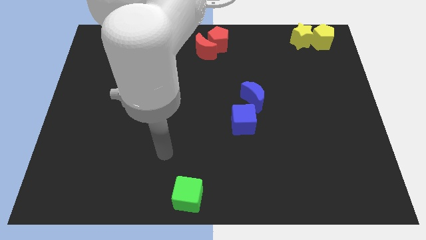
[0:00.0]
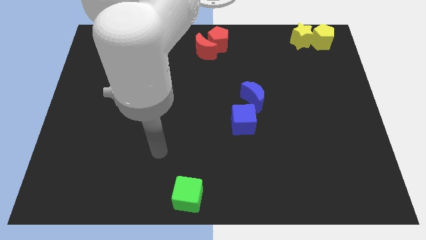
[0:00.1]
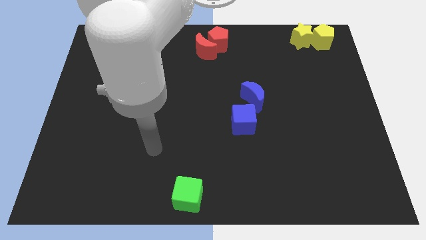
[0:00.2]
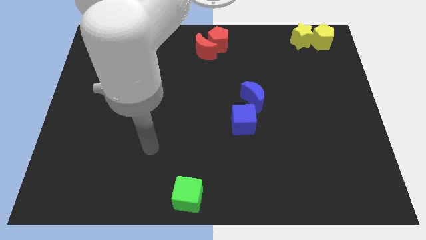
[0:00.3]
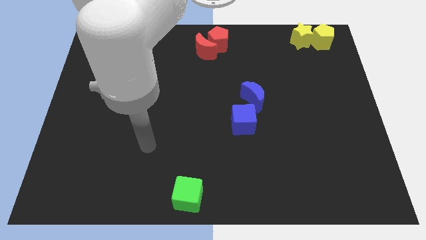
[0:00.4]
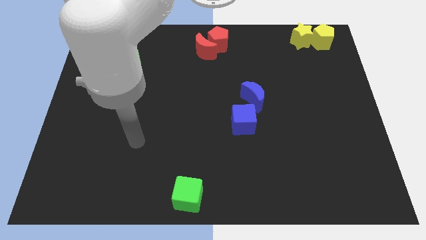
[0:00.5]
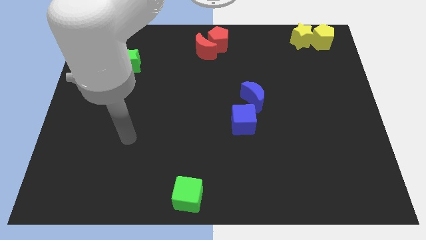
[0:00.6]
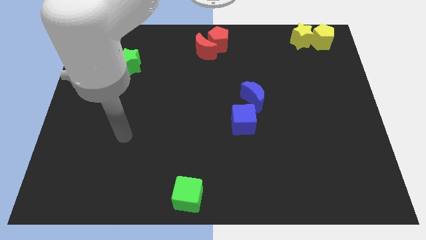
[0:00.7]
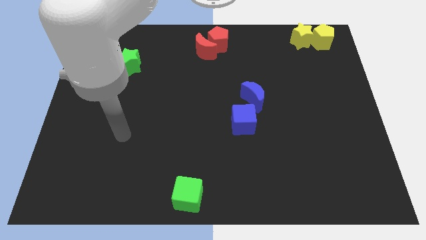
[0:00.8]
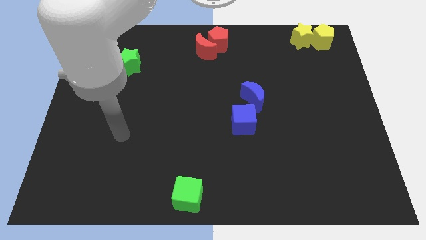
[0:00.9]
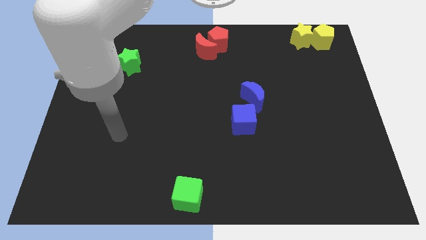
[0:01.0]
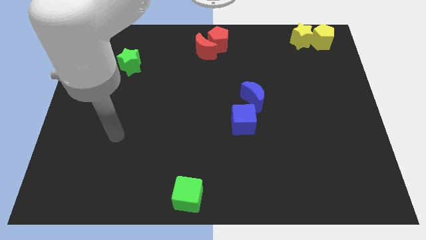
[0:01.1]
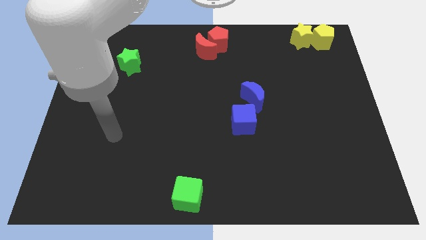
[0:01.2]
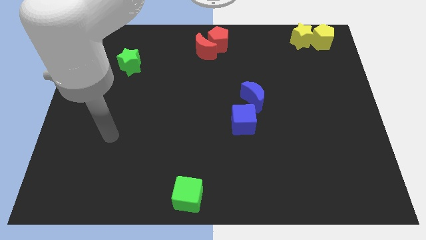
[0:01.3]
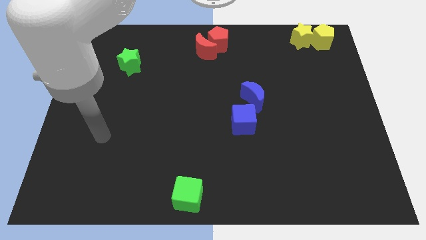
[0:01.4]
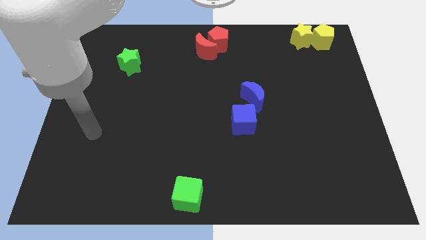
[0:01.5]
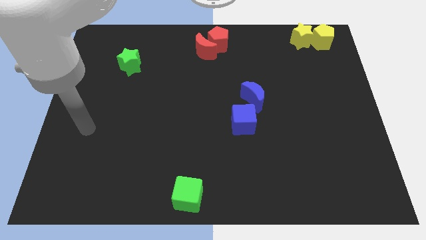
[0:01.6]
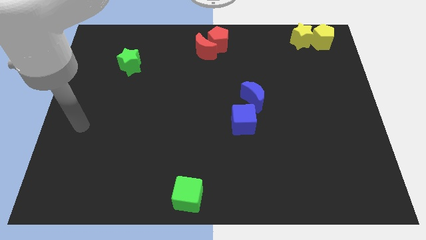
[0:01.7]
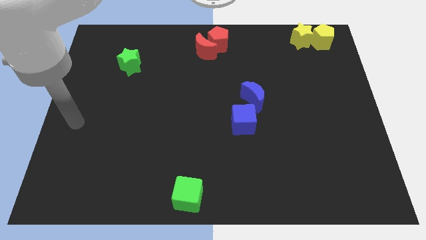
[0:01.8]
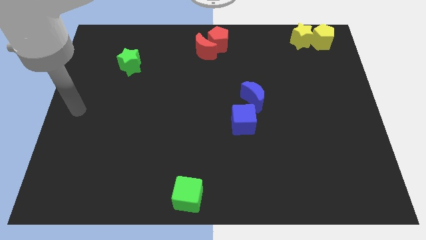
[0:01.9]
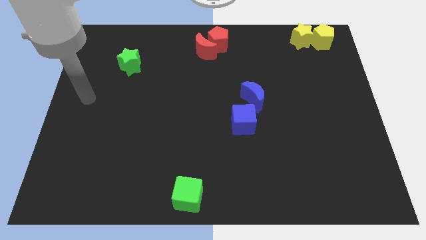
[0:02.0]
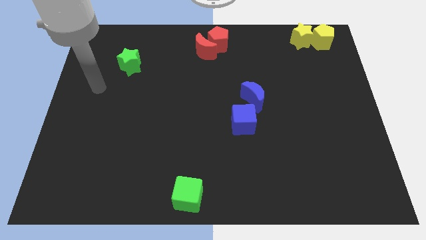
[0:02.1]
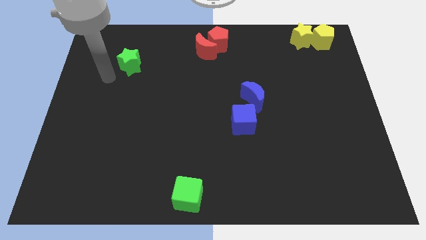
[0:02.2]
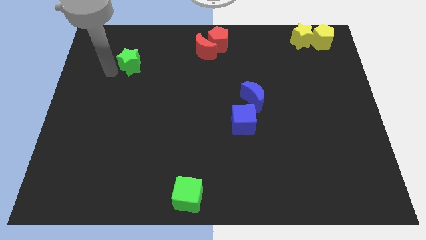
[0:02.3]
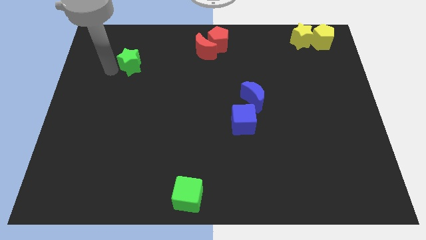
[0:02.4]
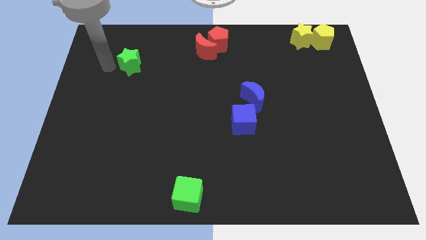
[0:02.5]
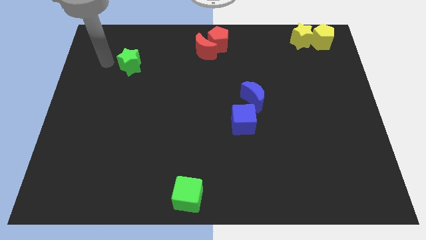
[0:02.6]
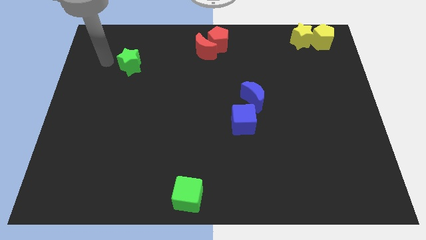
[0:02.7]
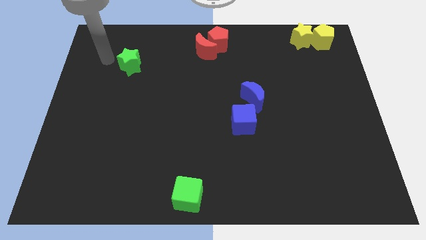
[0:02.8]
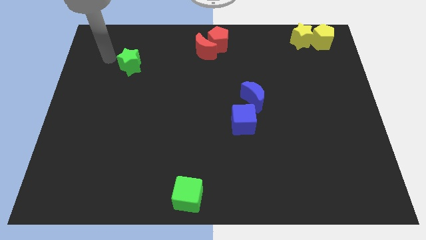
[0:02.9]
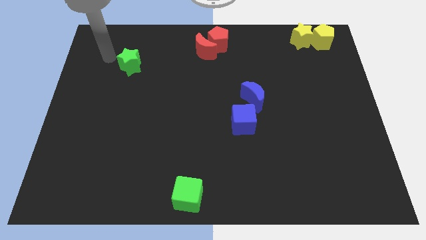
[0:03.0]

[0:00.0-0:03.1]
place the arm on the left side of the green star

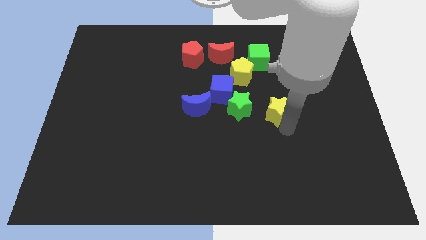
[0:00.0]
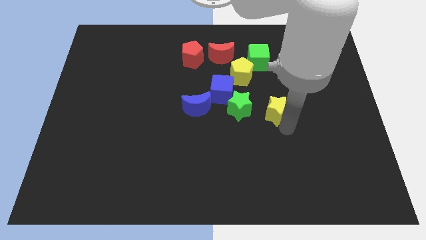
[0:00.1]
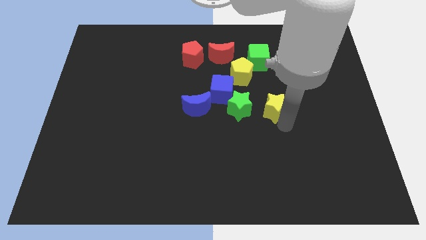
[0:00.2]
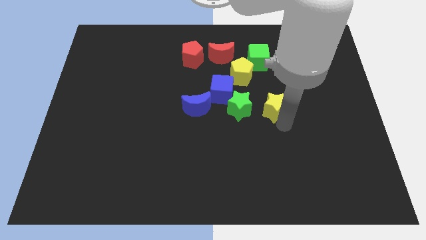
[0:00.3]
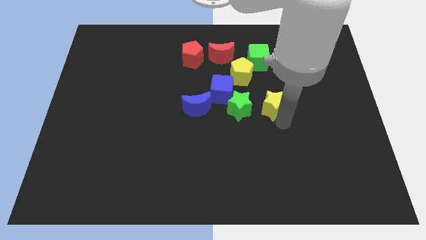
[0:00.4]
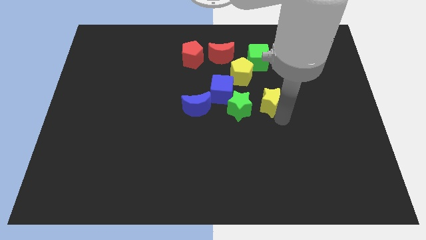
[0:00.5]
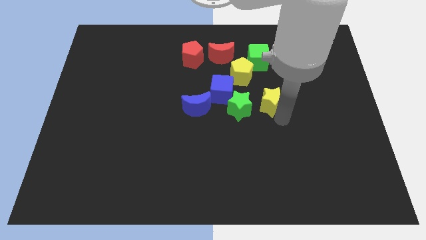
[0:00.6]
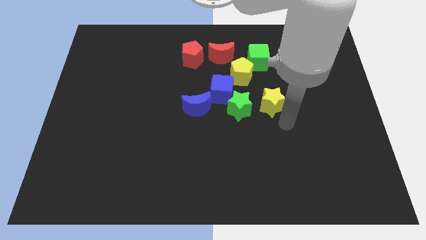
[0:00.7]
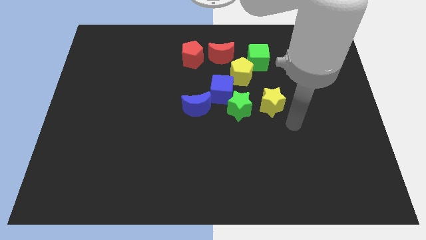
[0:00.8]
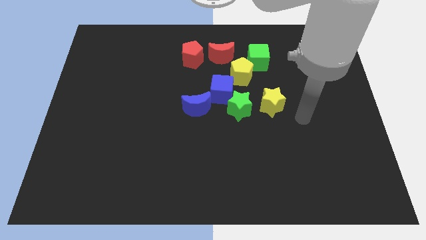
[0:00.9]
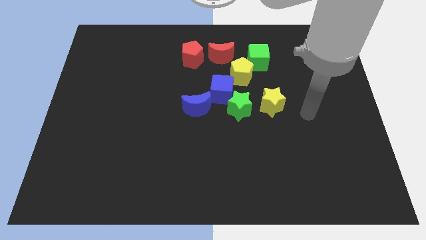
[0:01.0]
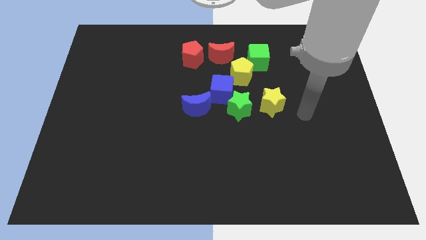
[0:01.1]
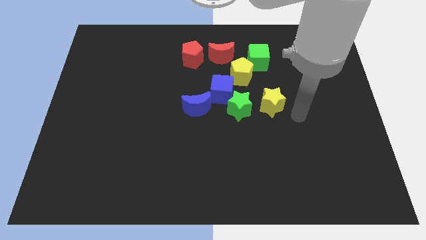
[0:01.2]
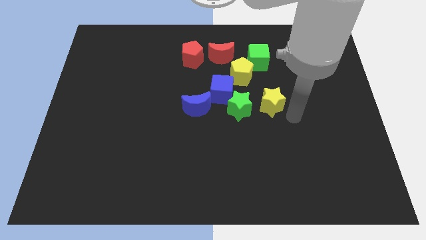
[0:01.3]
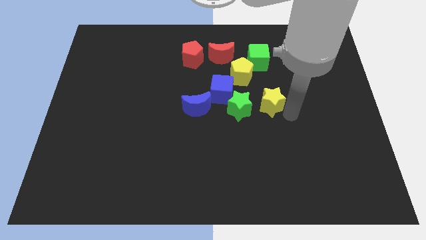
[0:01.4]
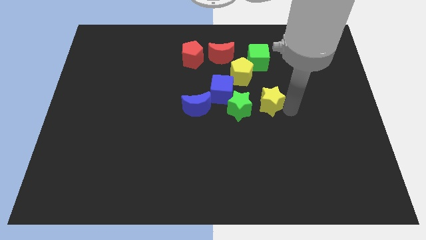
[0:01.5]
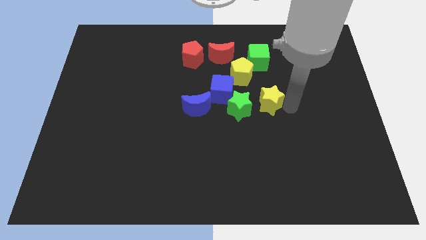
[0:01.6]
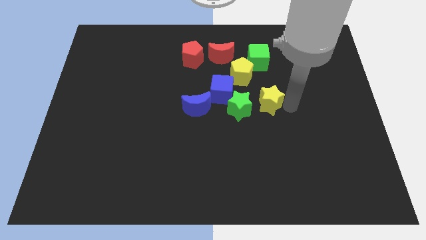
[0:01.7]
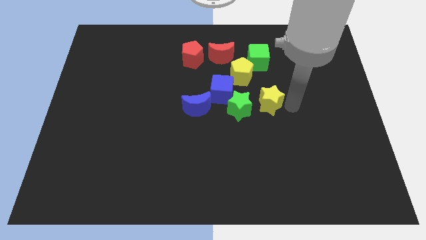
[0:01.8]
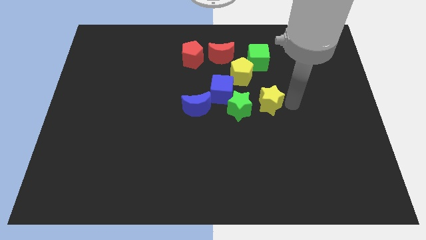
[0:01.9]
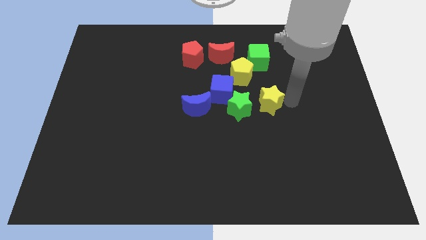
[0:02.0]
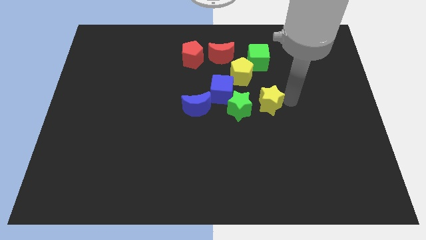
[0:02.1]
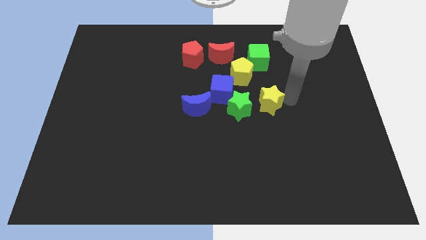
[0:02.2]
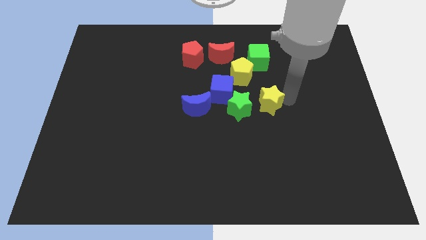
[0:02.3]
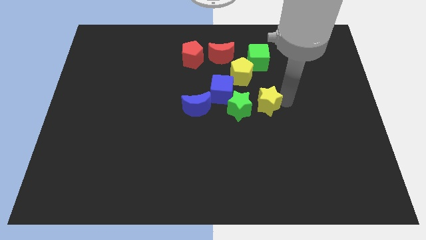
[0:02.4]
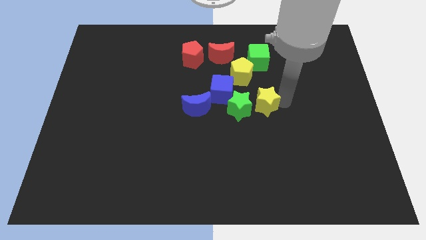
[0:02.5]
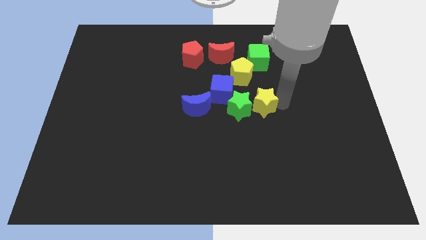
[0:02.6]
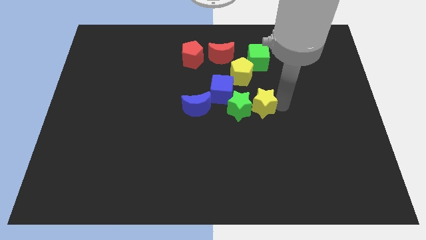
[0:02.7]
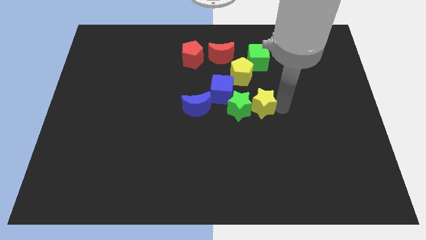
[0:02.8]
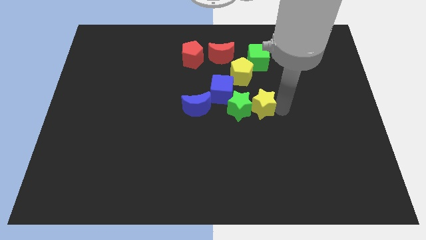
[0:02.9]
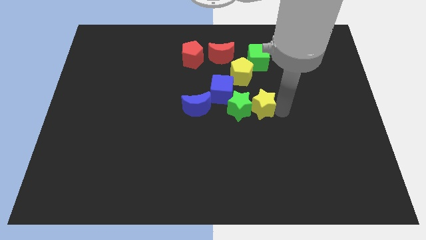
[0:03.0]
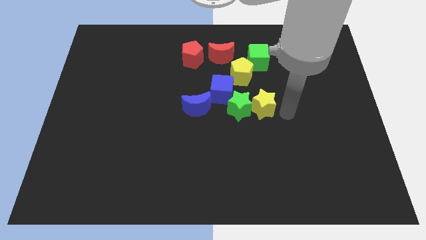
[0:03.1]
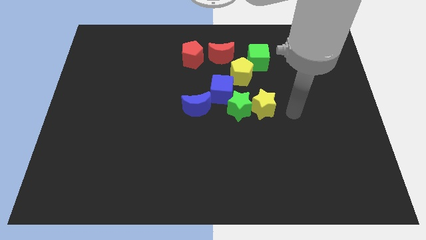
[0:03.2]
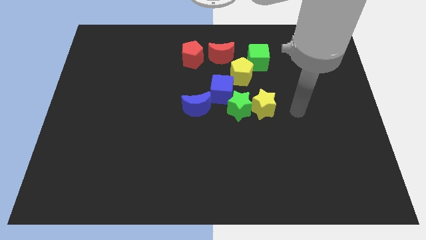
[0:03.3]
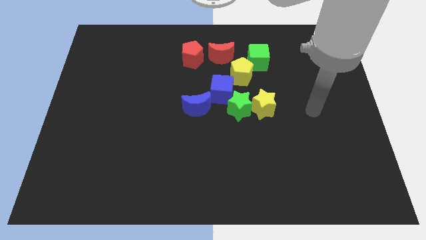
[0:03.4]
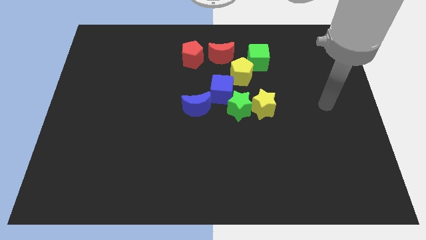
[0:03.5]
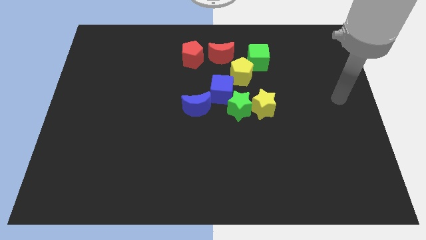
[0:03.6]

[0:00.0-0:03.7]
push the yellow star to the bottom of the green cube

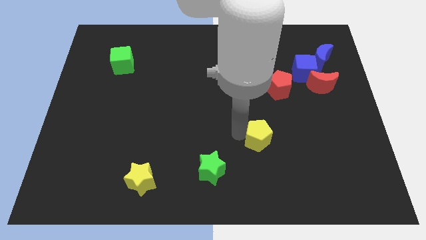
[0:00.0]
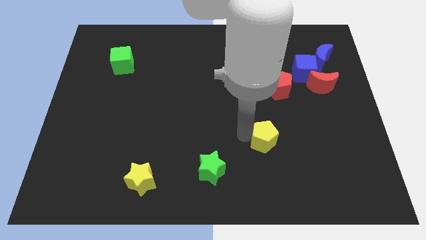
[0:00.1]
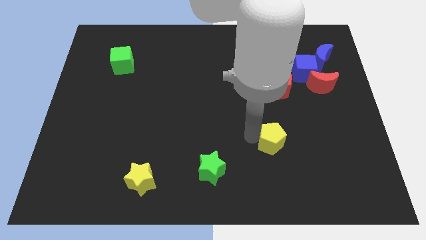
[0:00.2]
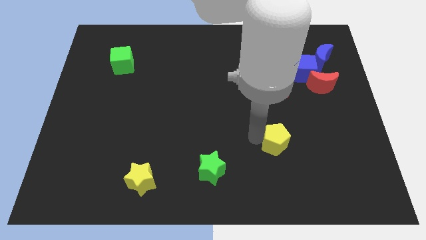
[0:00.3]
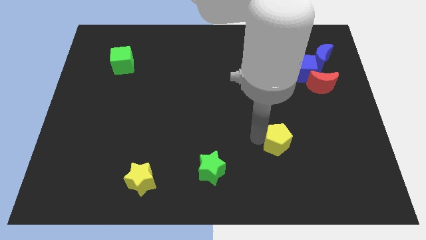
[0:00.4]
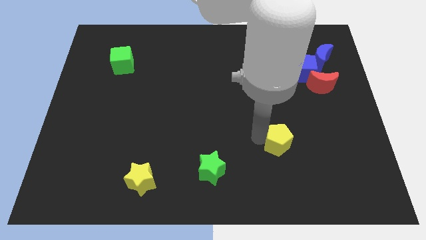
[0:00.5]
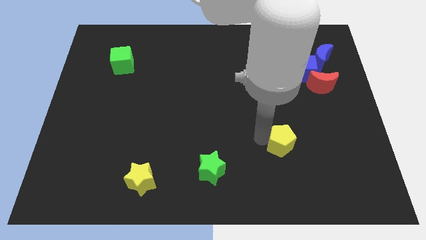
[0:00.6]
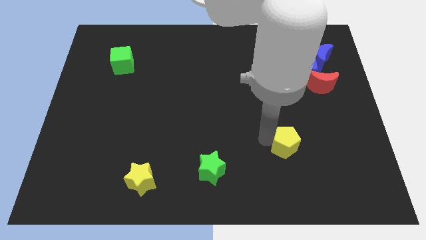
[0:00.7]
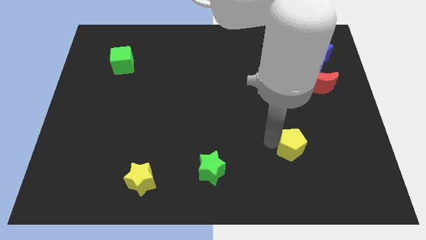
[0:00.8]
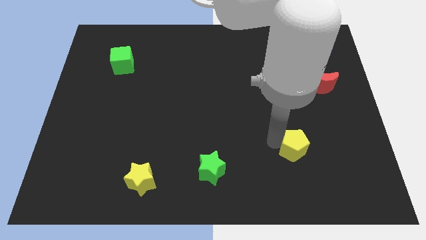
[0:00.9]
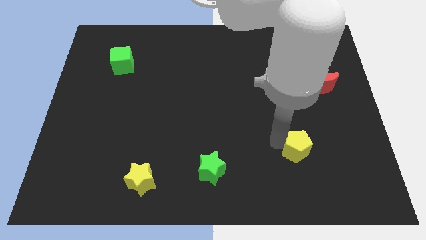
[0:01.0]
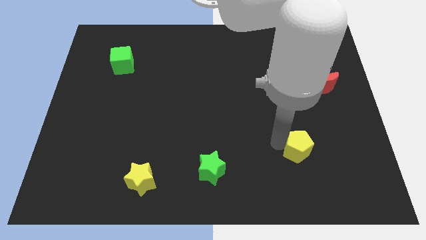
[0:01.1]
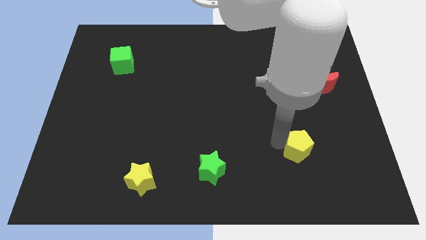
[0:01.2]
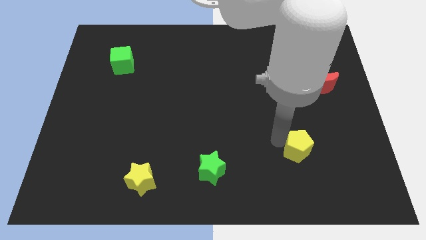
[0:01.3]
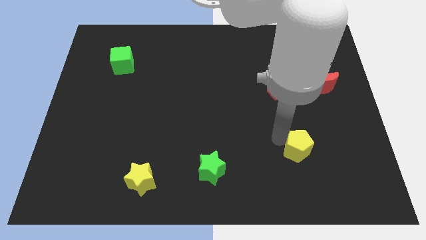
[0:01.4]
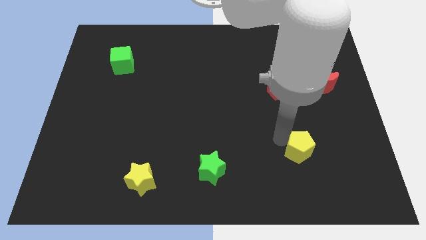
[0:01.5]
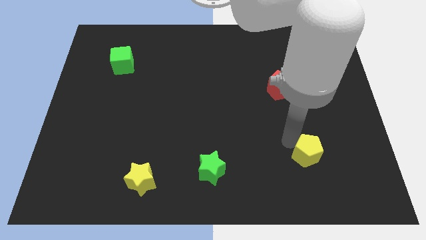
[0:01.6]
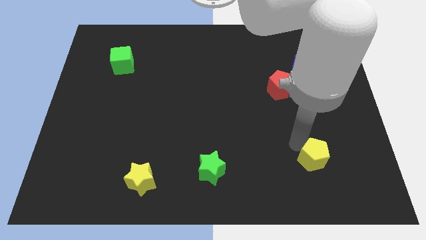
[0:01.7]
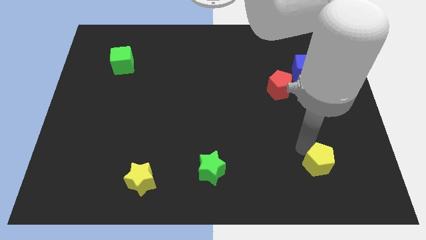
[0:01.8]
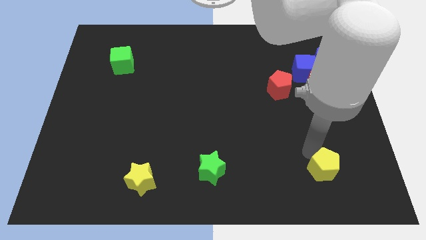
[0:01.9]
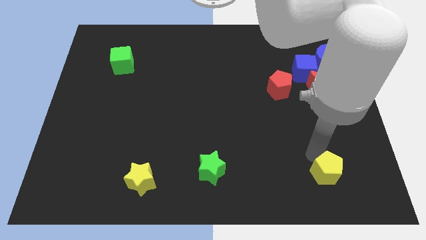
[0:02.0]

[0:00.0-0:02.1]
place the yellow pentgaon right to the green star
